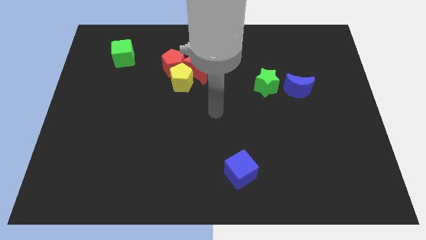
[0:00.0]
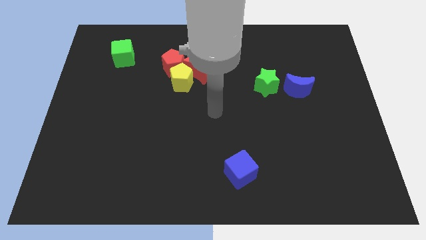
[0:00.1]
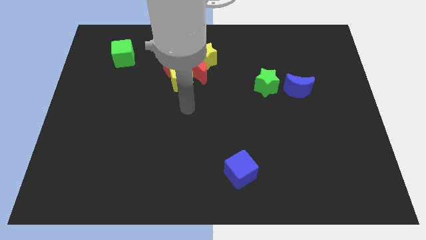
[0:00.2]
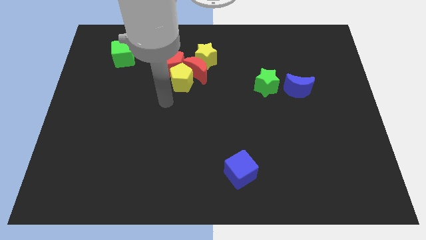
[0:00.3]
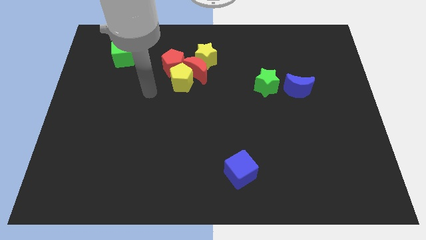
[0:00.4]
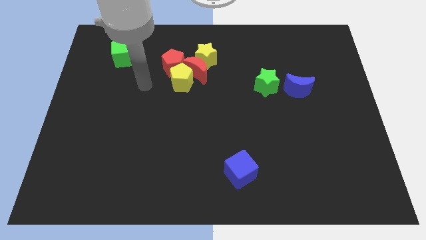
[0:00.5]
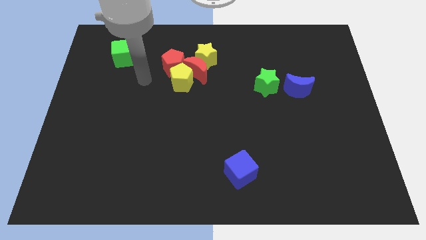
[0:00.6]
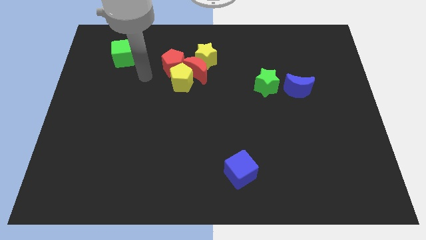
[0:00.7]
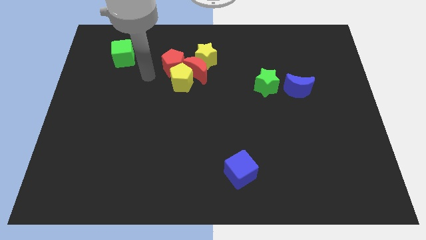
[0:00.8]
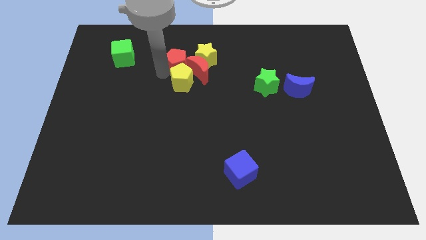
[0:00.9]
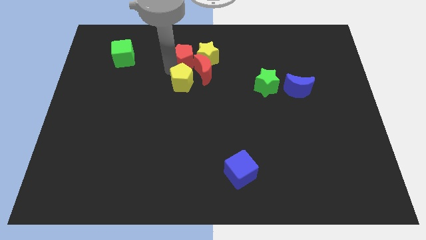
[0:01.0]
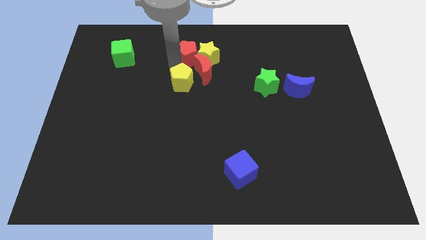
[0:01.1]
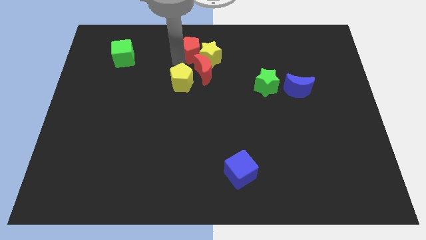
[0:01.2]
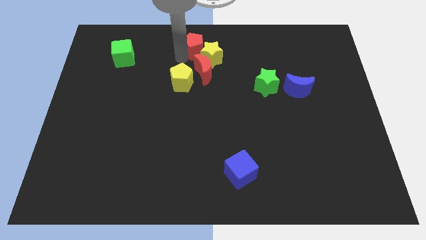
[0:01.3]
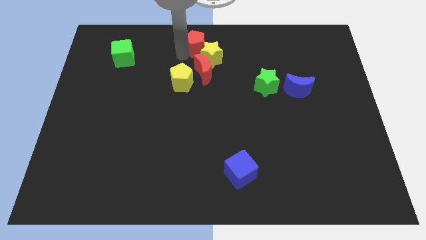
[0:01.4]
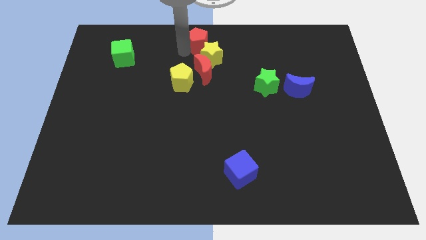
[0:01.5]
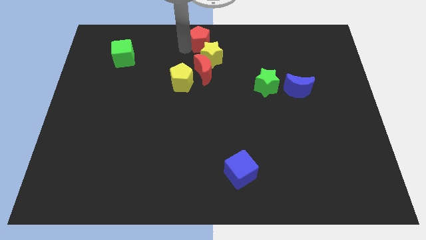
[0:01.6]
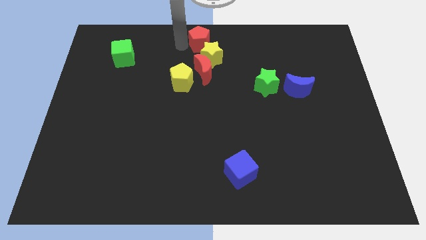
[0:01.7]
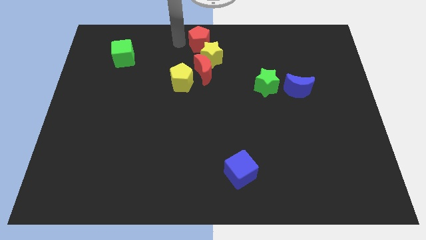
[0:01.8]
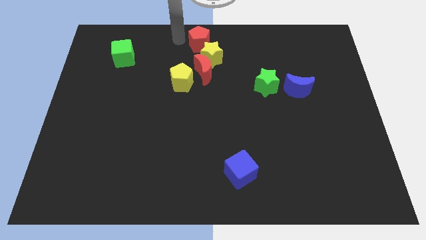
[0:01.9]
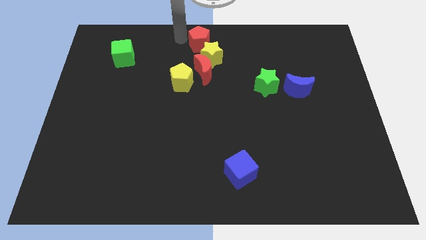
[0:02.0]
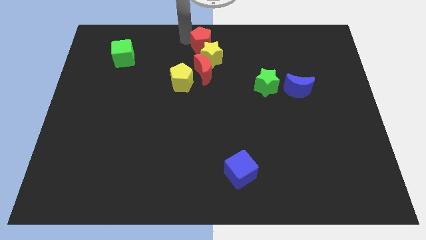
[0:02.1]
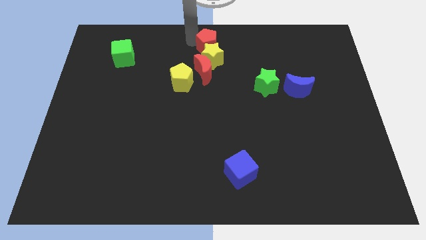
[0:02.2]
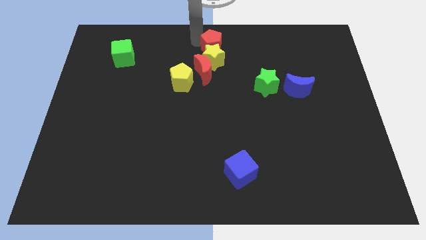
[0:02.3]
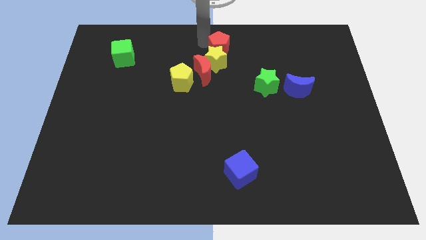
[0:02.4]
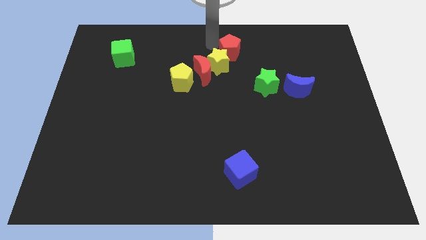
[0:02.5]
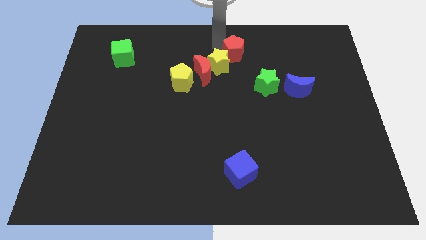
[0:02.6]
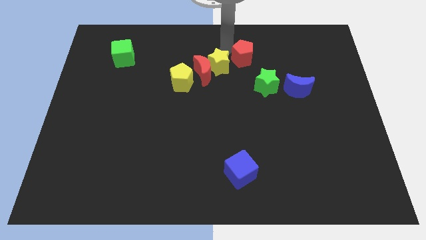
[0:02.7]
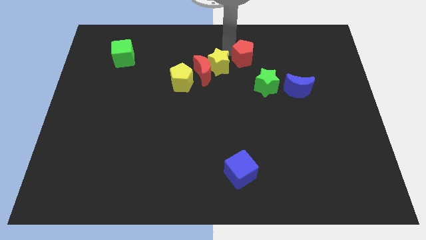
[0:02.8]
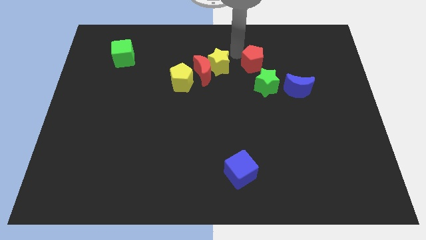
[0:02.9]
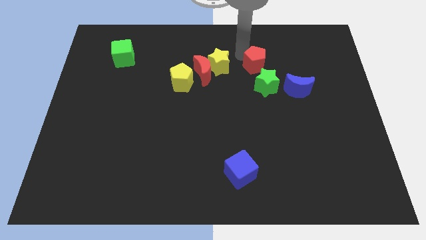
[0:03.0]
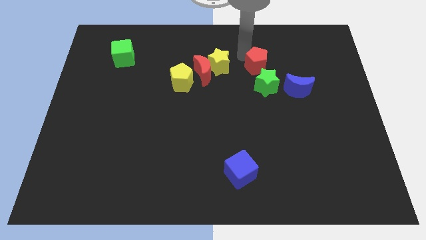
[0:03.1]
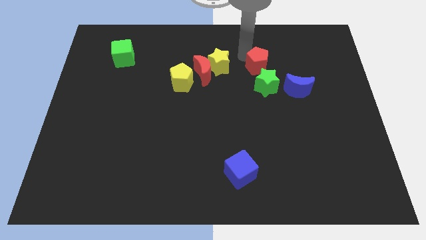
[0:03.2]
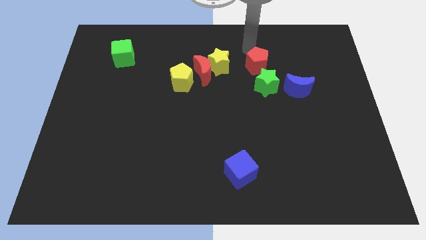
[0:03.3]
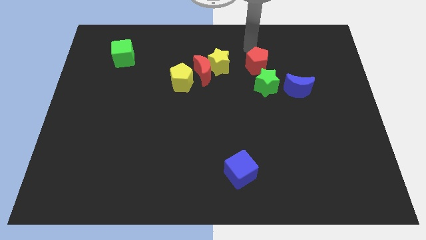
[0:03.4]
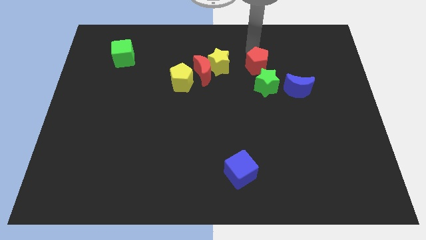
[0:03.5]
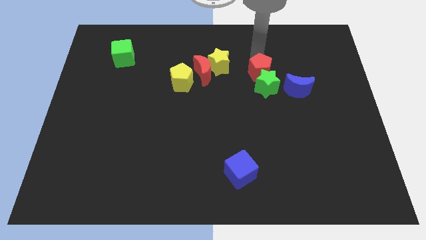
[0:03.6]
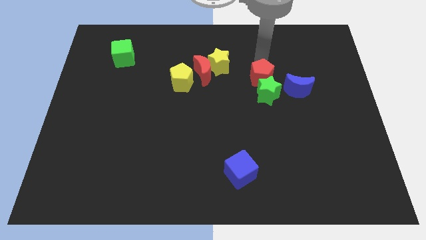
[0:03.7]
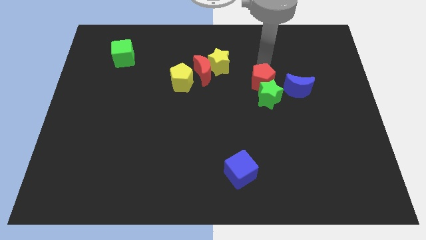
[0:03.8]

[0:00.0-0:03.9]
slide the red pentagon to the green star

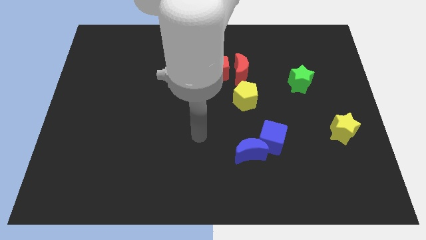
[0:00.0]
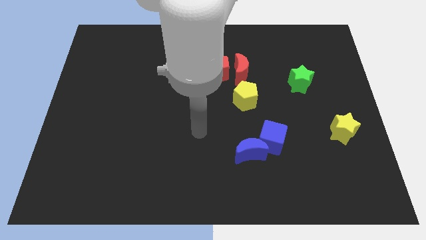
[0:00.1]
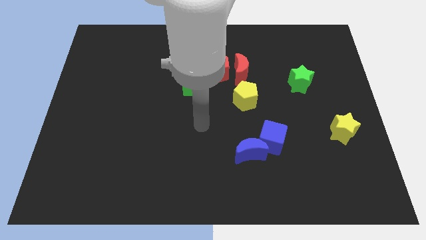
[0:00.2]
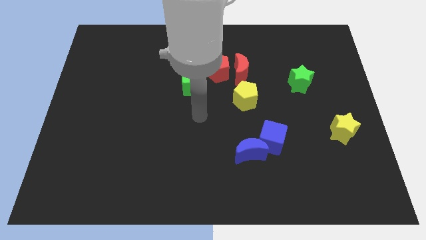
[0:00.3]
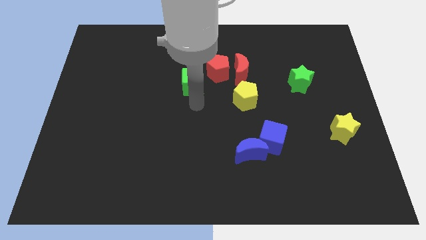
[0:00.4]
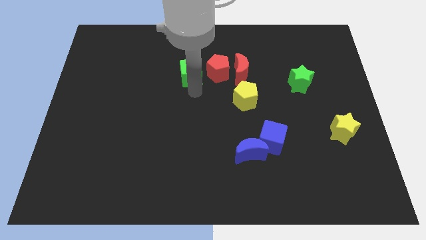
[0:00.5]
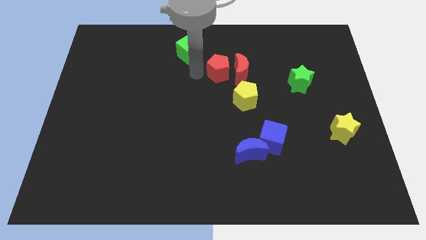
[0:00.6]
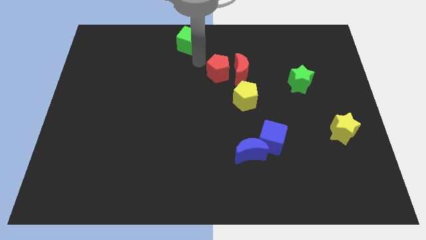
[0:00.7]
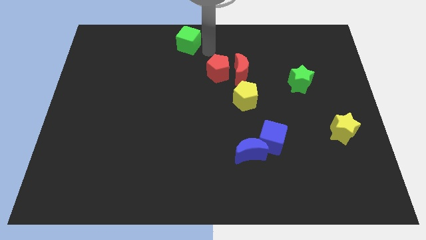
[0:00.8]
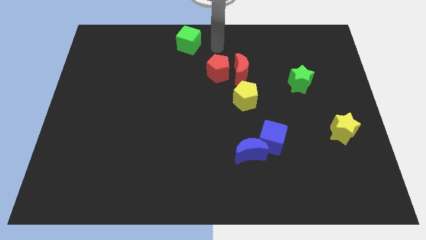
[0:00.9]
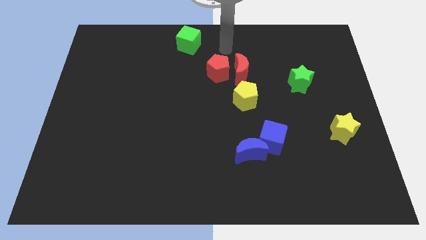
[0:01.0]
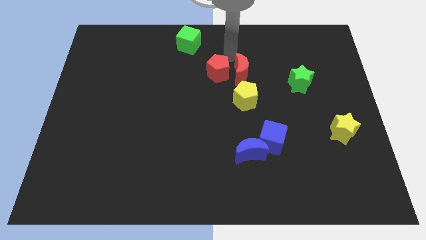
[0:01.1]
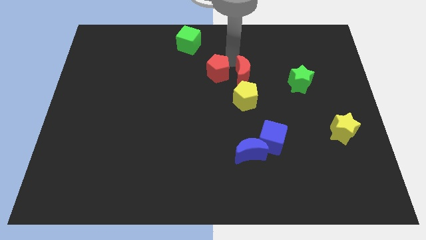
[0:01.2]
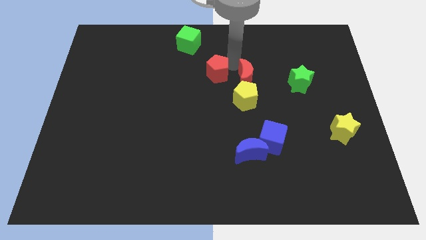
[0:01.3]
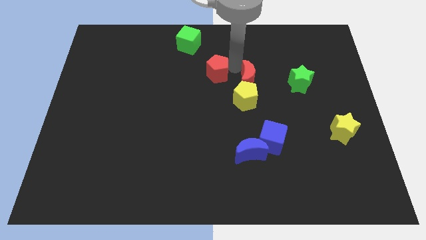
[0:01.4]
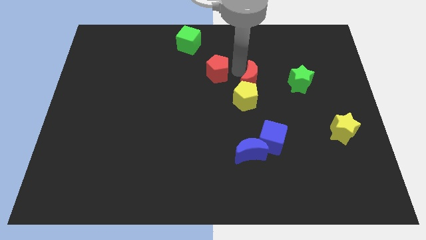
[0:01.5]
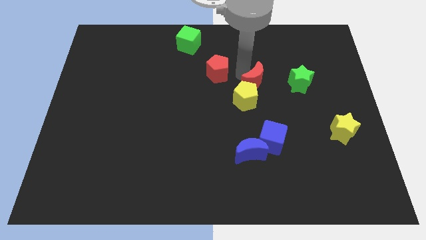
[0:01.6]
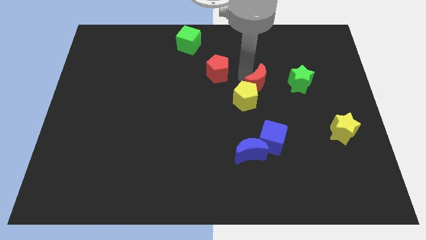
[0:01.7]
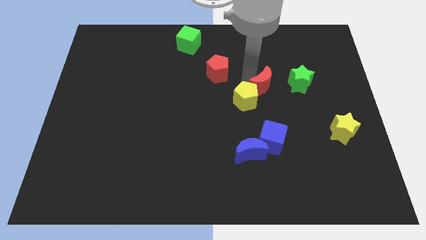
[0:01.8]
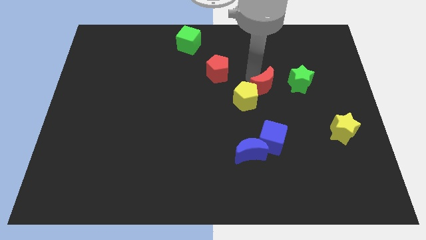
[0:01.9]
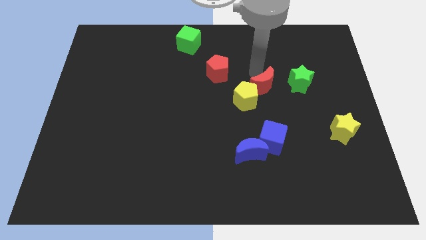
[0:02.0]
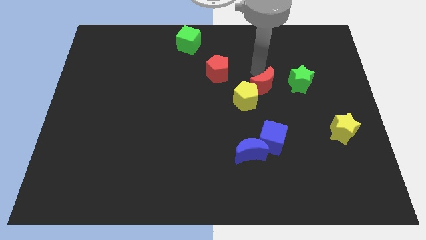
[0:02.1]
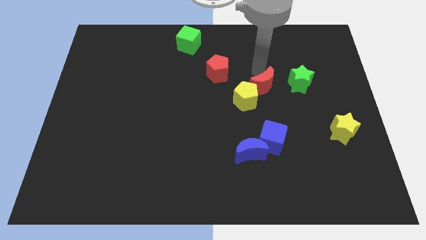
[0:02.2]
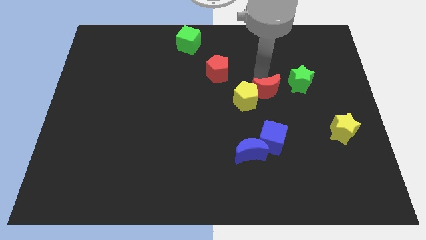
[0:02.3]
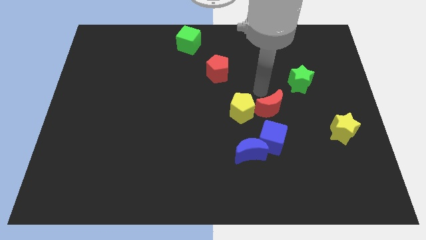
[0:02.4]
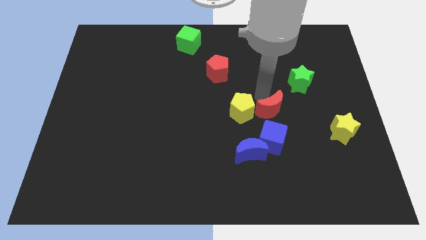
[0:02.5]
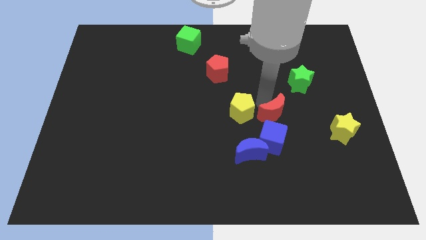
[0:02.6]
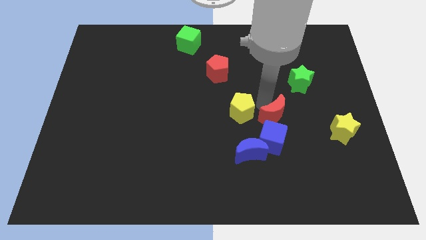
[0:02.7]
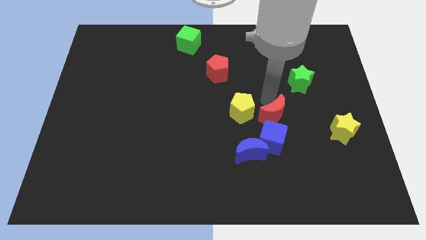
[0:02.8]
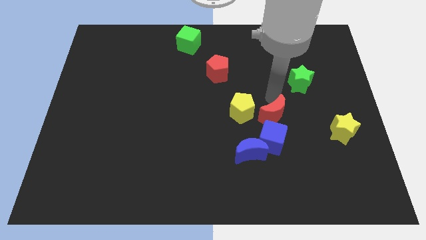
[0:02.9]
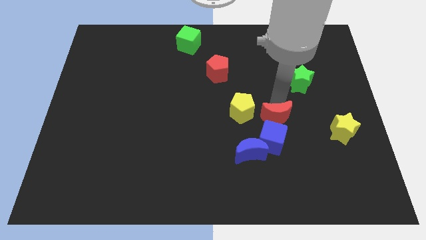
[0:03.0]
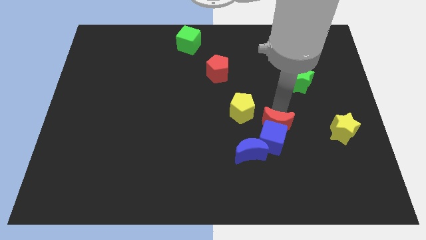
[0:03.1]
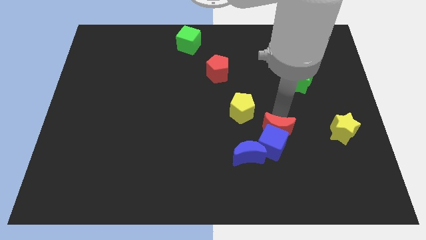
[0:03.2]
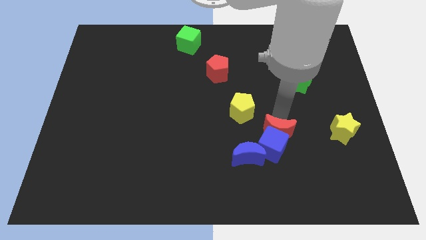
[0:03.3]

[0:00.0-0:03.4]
slide the red moon close to the blue cube

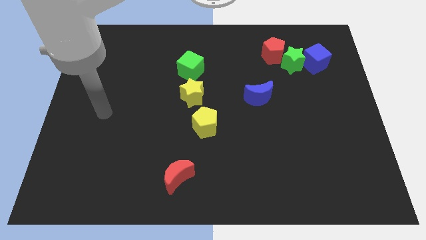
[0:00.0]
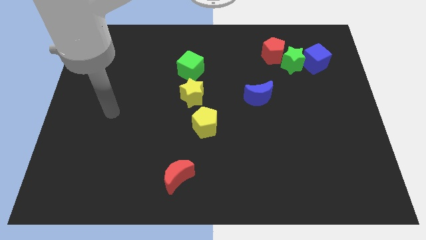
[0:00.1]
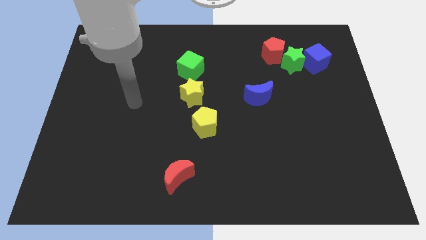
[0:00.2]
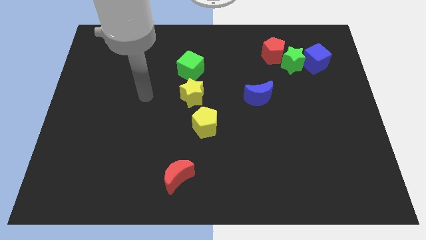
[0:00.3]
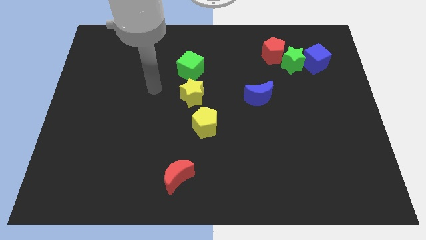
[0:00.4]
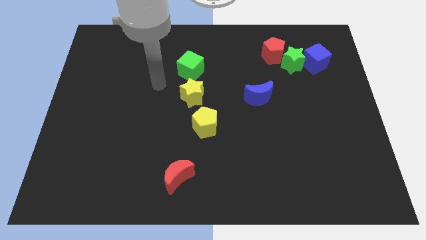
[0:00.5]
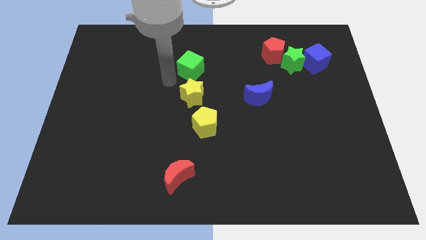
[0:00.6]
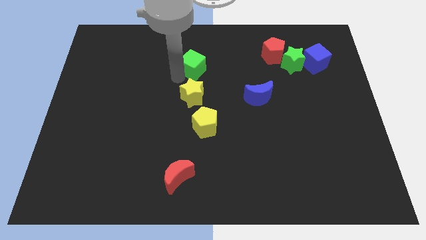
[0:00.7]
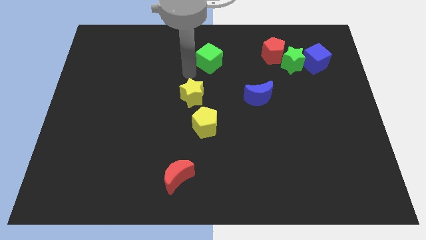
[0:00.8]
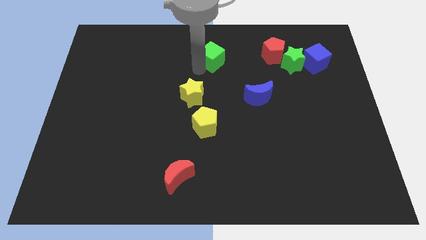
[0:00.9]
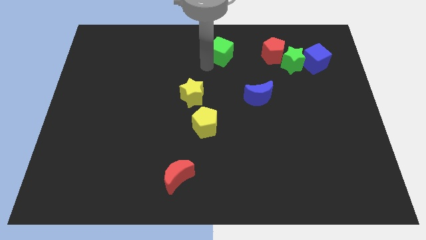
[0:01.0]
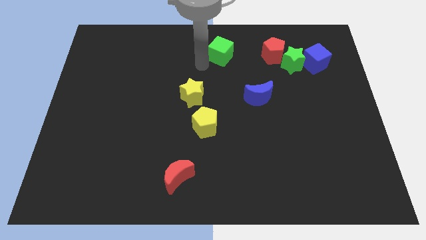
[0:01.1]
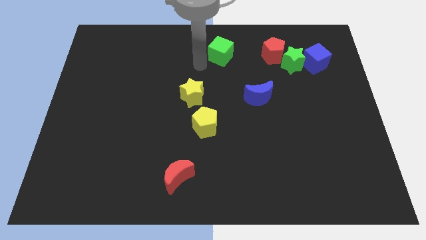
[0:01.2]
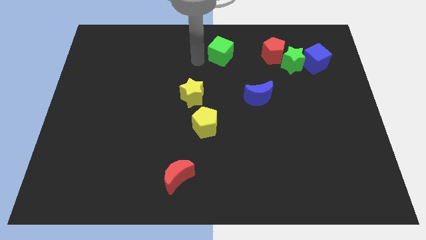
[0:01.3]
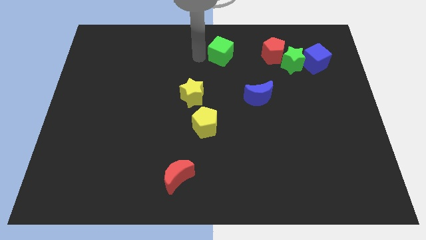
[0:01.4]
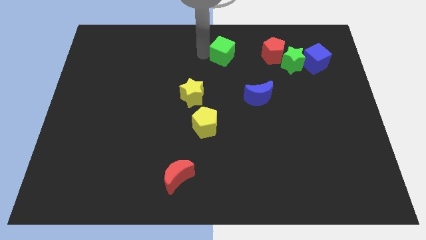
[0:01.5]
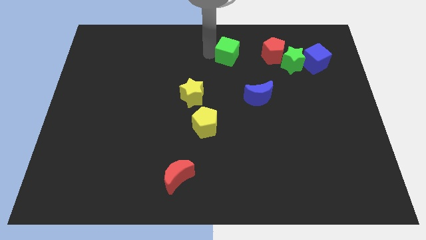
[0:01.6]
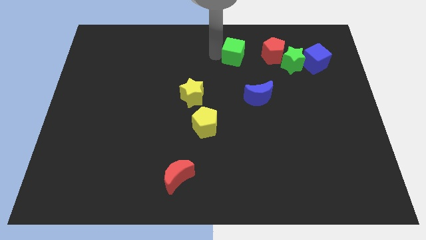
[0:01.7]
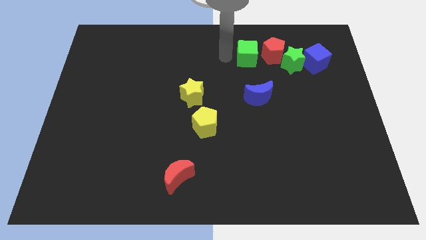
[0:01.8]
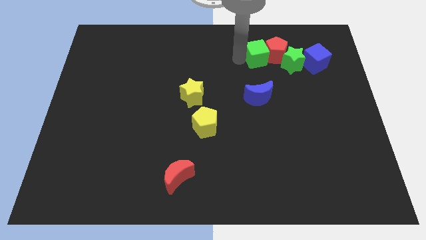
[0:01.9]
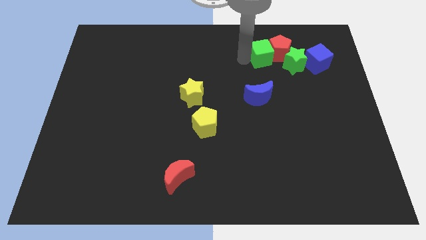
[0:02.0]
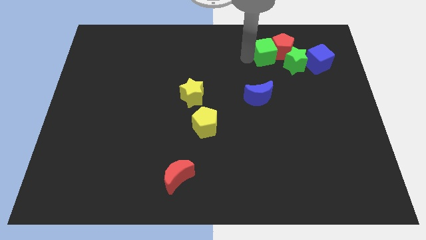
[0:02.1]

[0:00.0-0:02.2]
put the green cube close to the red pentagon
